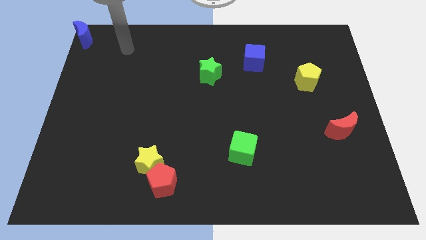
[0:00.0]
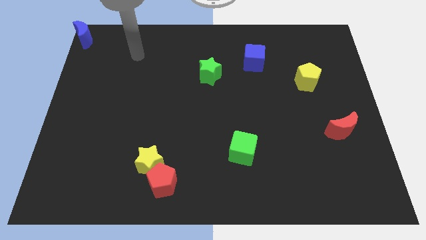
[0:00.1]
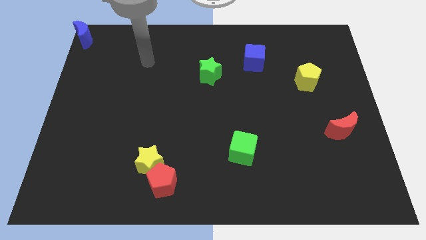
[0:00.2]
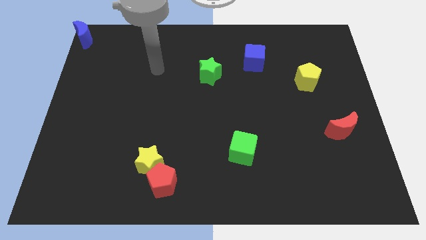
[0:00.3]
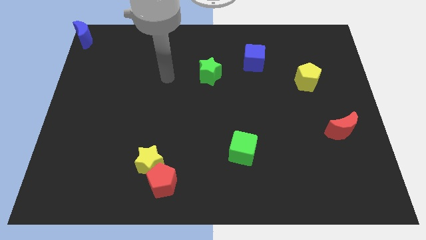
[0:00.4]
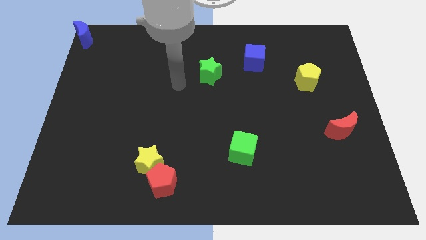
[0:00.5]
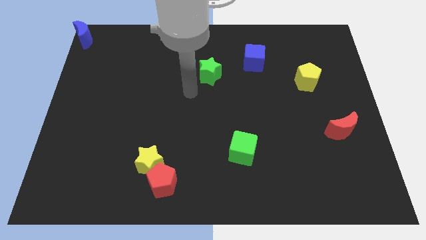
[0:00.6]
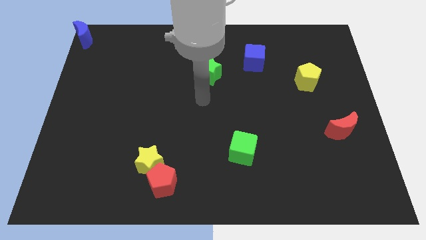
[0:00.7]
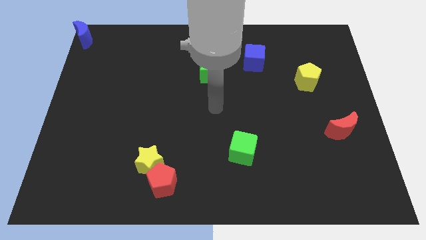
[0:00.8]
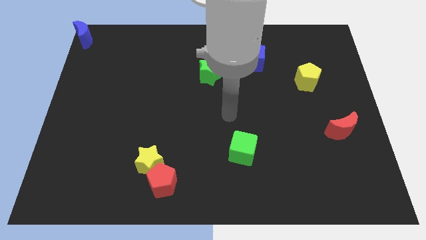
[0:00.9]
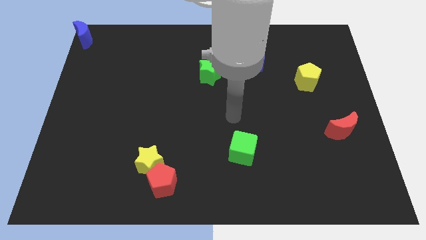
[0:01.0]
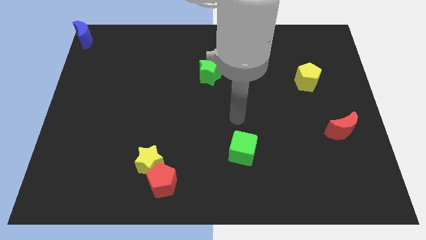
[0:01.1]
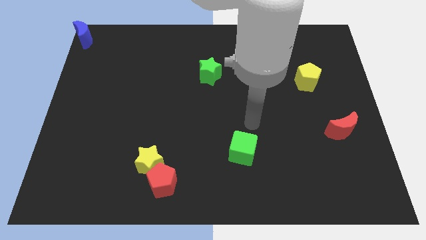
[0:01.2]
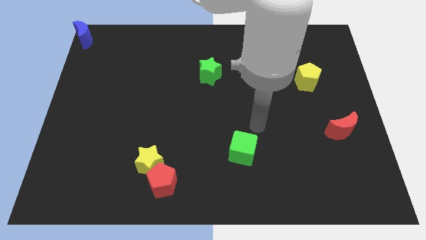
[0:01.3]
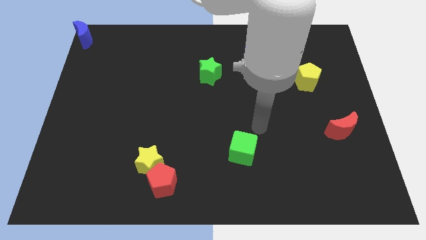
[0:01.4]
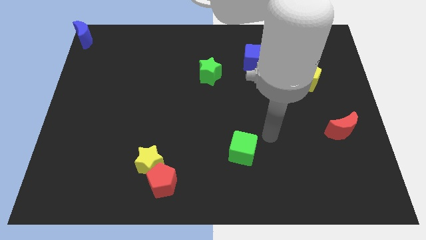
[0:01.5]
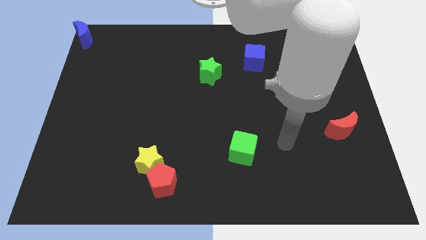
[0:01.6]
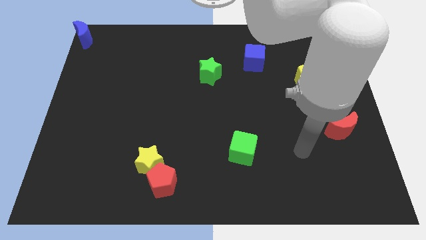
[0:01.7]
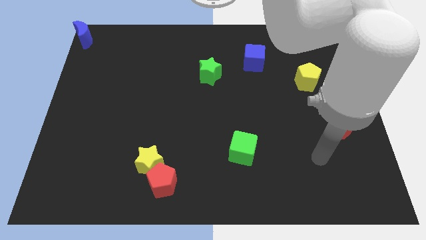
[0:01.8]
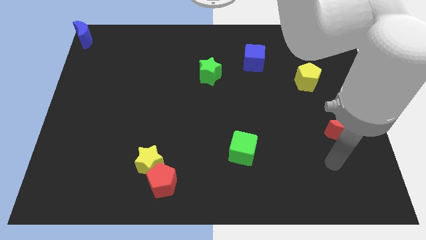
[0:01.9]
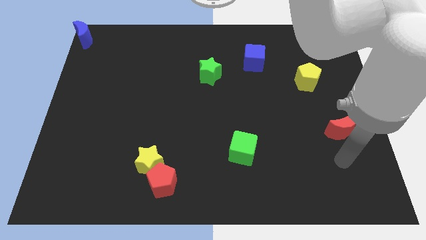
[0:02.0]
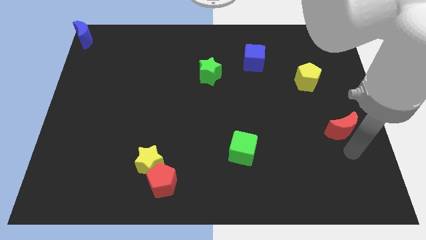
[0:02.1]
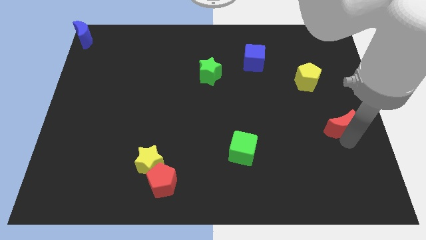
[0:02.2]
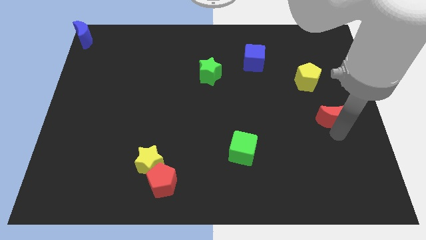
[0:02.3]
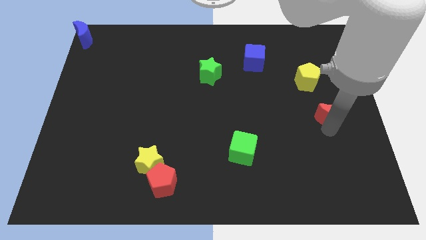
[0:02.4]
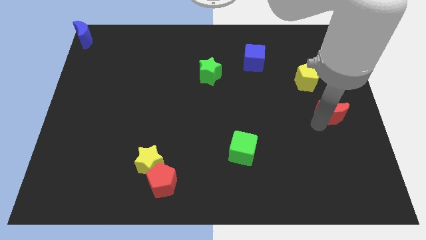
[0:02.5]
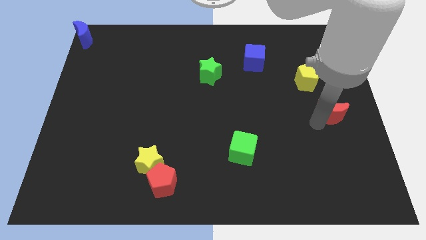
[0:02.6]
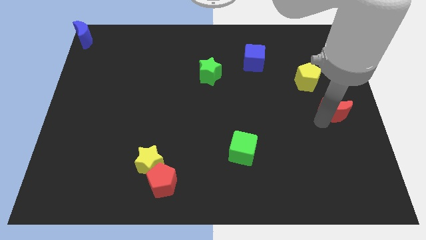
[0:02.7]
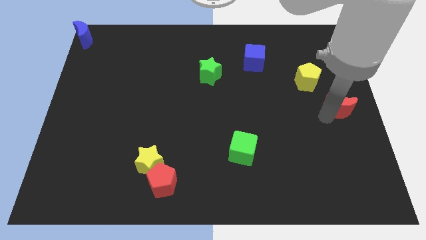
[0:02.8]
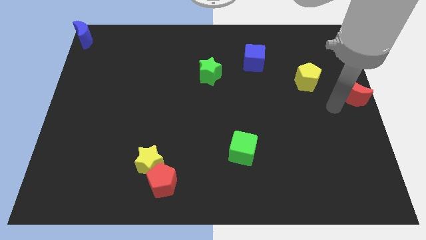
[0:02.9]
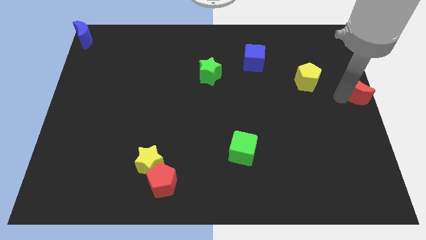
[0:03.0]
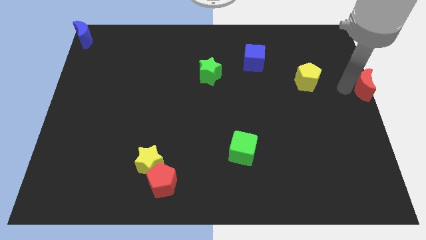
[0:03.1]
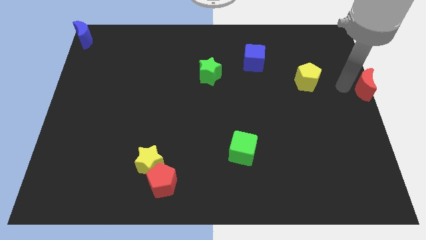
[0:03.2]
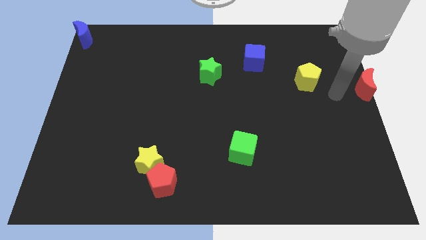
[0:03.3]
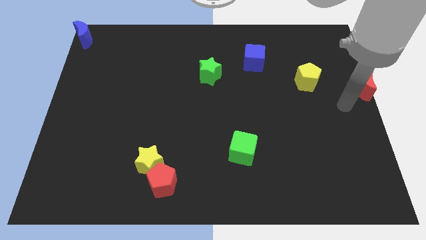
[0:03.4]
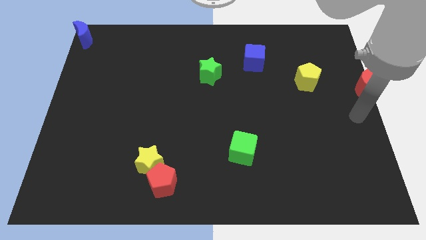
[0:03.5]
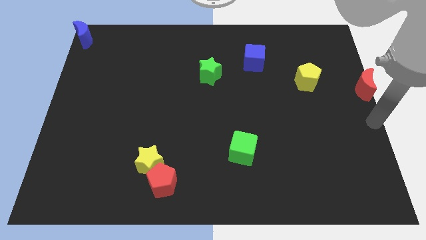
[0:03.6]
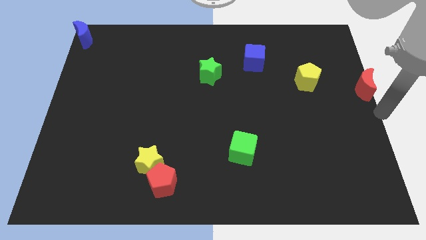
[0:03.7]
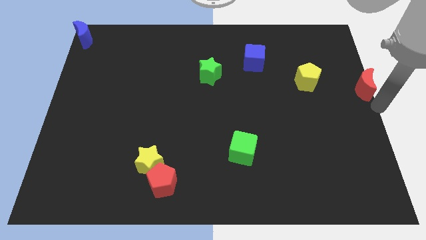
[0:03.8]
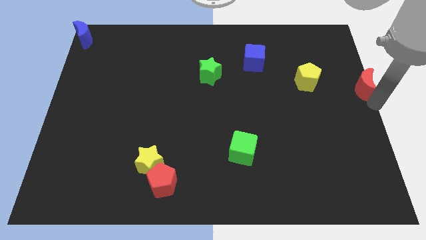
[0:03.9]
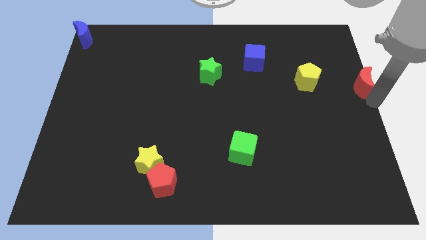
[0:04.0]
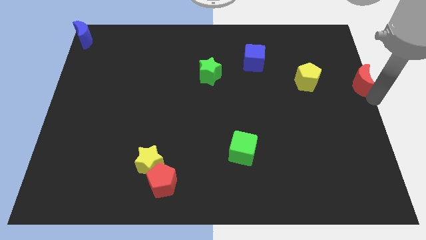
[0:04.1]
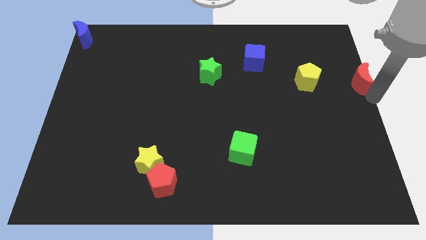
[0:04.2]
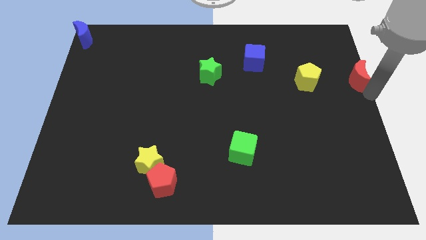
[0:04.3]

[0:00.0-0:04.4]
slide the red crescent to the right of the yellow pentagon

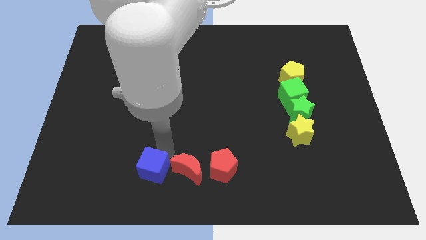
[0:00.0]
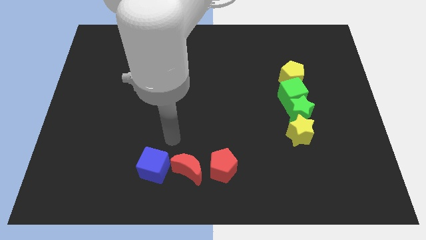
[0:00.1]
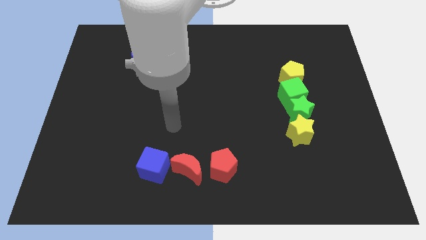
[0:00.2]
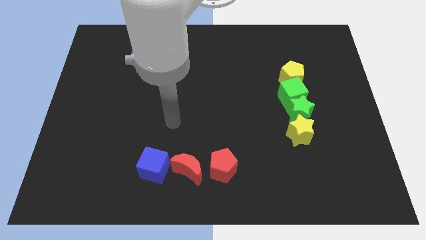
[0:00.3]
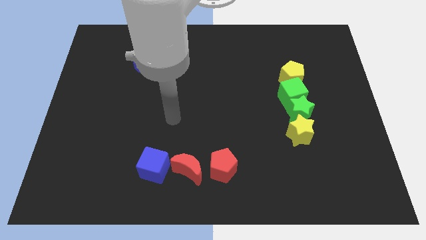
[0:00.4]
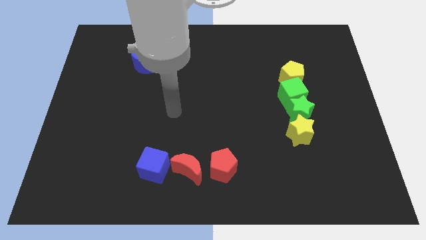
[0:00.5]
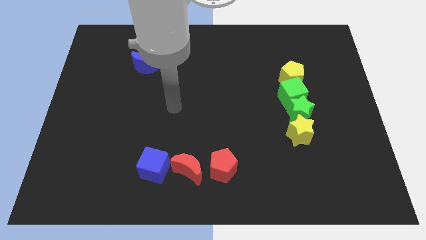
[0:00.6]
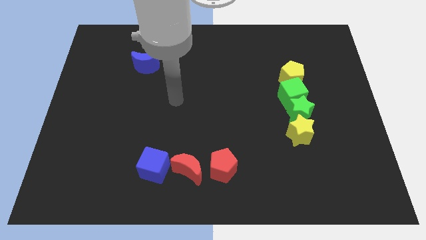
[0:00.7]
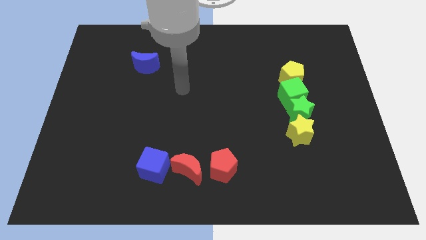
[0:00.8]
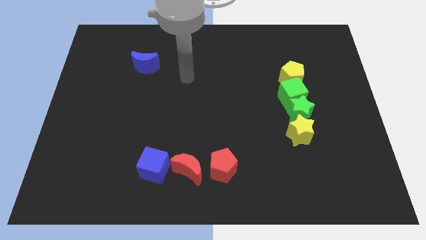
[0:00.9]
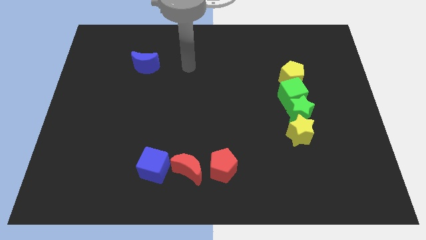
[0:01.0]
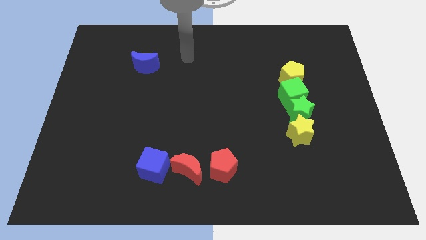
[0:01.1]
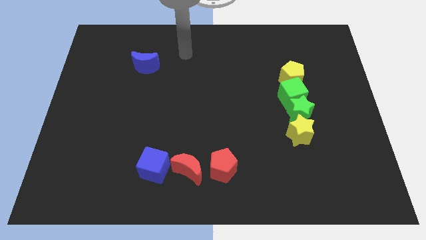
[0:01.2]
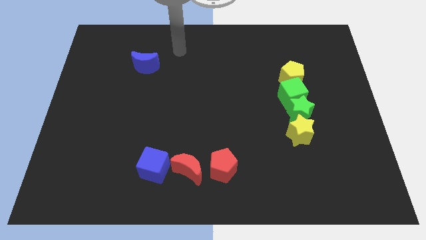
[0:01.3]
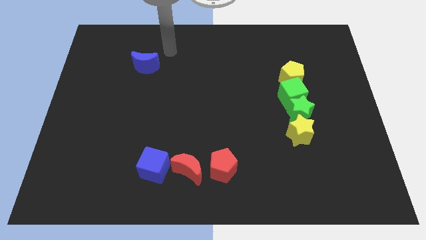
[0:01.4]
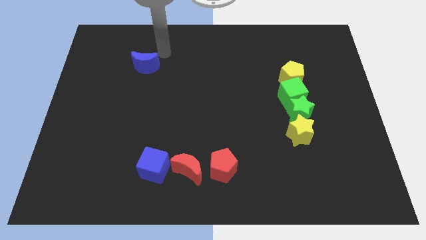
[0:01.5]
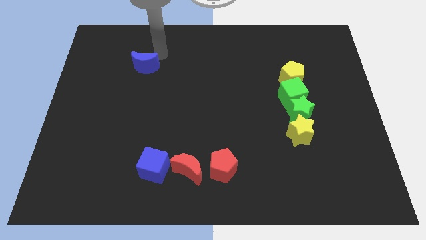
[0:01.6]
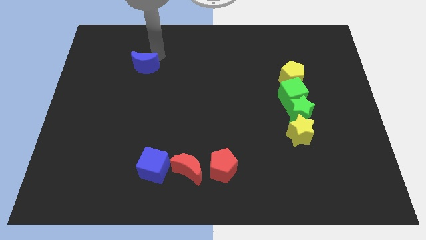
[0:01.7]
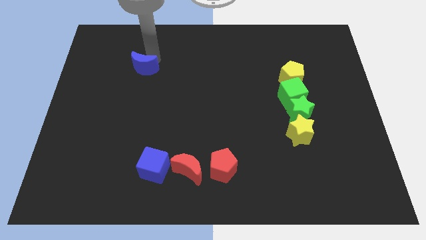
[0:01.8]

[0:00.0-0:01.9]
tap the top side of the blue crescent

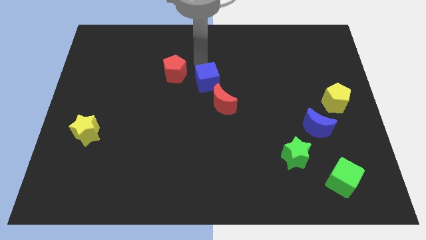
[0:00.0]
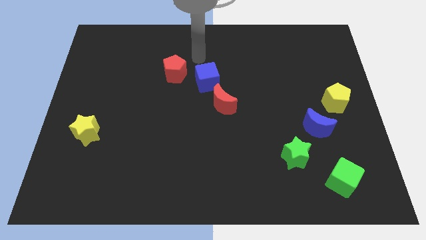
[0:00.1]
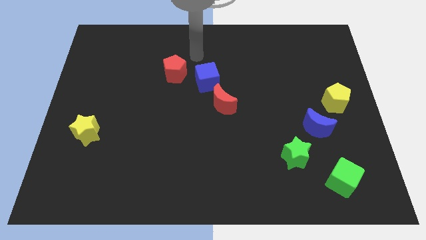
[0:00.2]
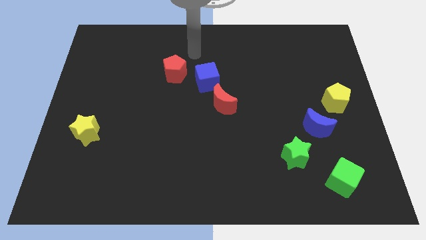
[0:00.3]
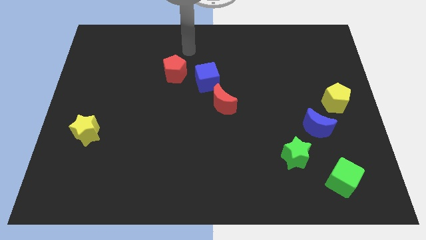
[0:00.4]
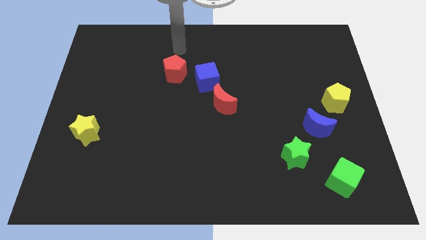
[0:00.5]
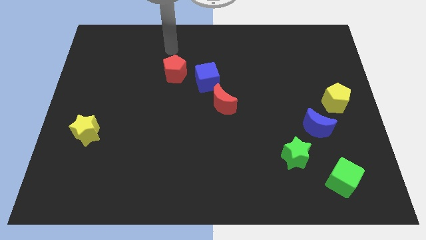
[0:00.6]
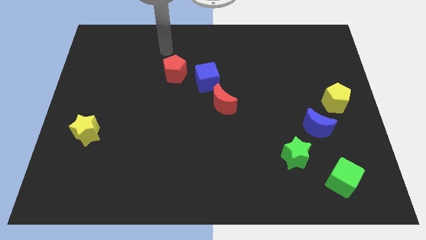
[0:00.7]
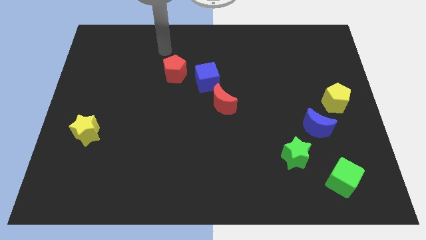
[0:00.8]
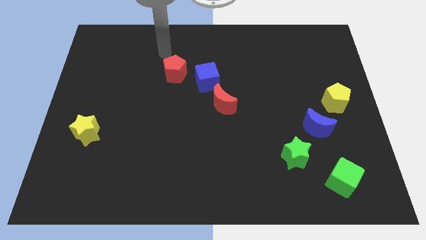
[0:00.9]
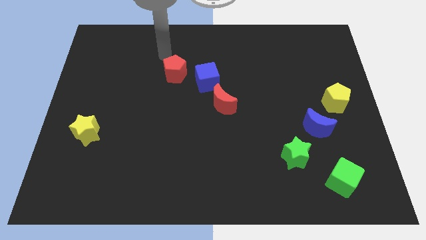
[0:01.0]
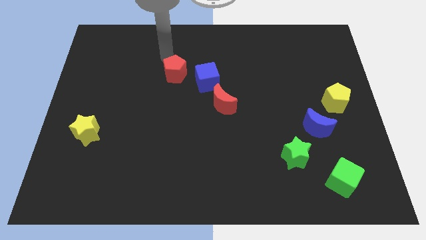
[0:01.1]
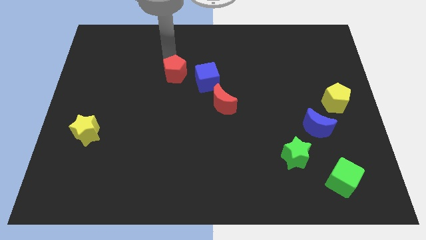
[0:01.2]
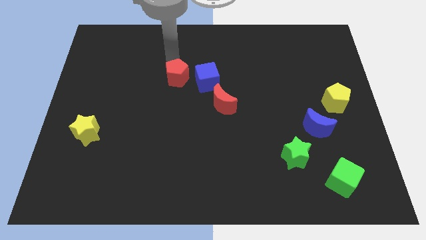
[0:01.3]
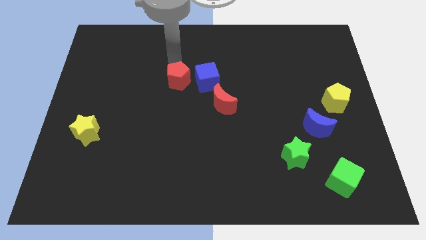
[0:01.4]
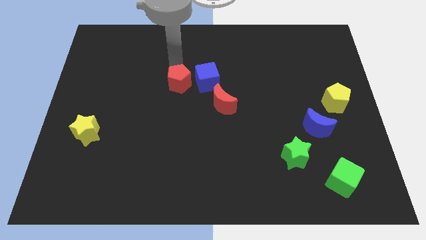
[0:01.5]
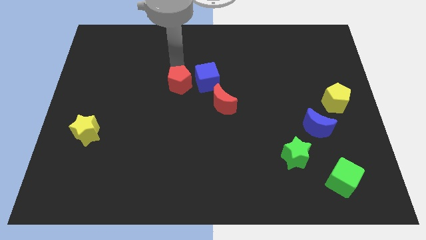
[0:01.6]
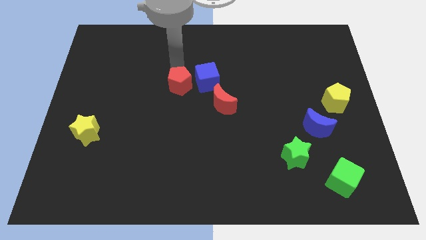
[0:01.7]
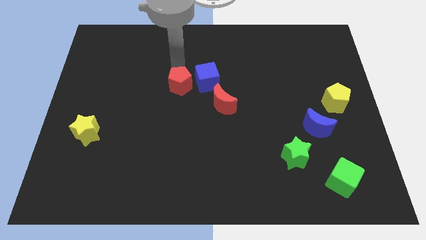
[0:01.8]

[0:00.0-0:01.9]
push the red pentagon slightly to the bottom

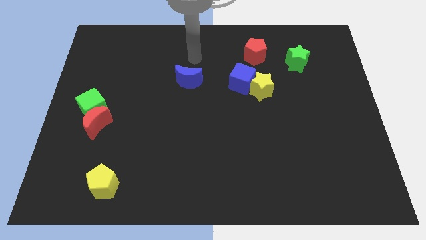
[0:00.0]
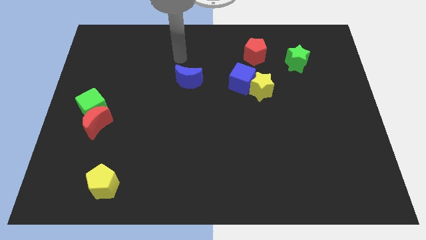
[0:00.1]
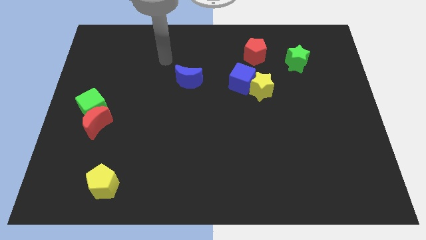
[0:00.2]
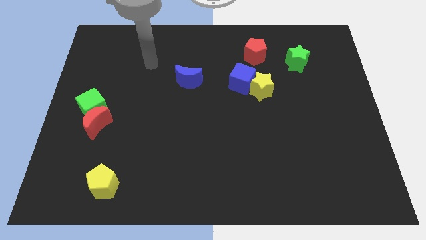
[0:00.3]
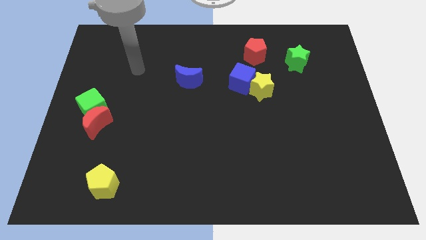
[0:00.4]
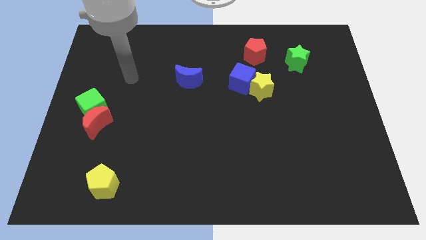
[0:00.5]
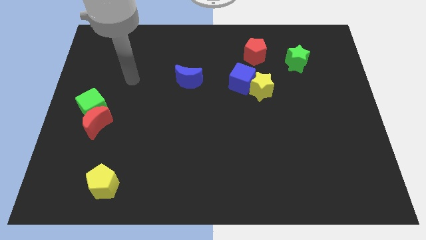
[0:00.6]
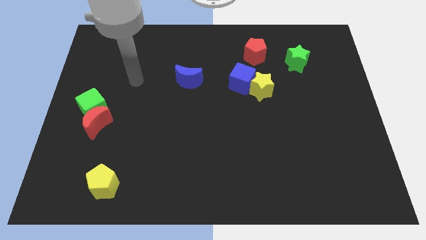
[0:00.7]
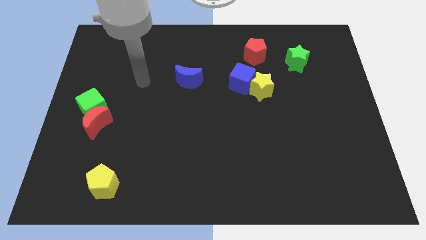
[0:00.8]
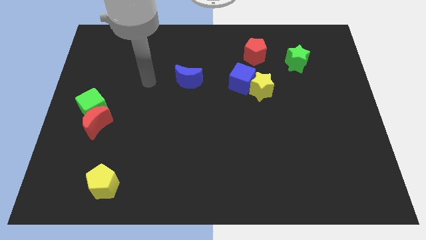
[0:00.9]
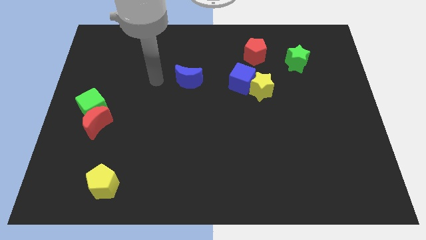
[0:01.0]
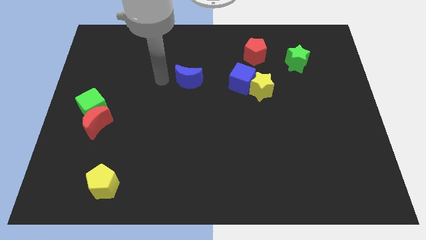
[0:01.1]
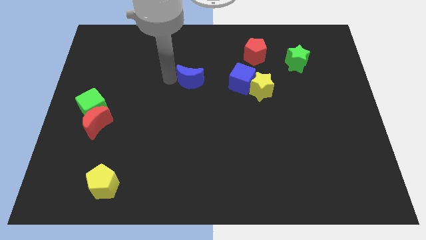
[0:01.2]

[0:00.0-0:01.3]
tap the left side of the blue crescent
